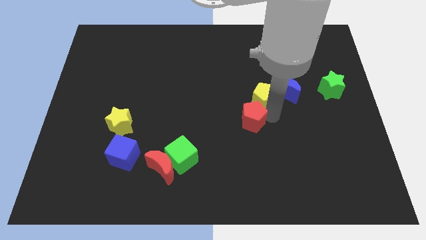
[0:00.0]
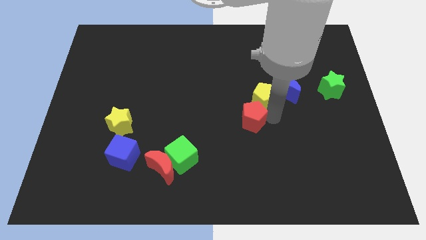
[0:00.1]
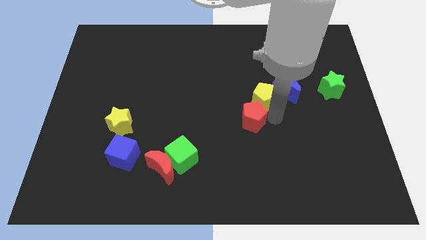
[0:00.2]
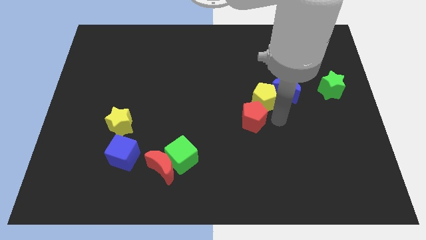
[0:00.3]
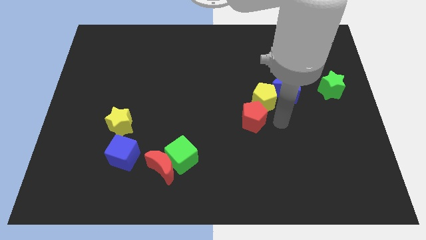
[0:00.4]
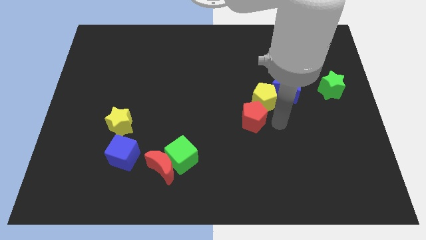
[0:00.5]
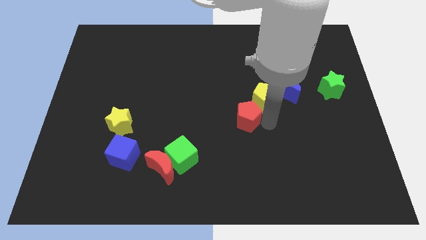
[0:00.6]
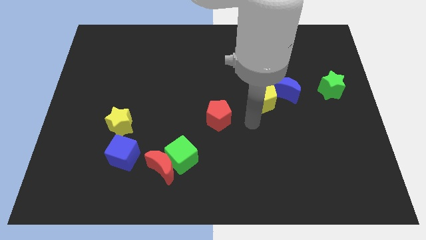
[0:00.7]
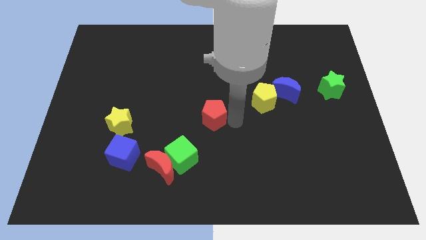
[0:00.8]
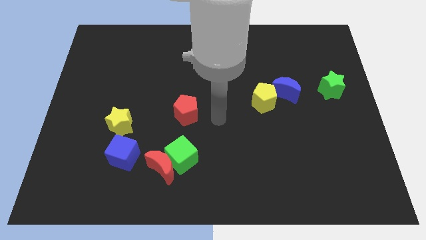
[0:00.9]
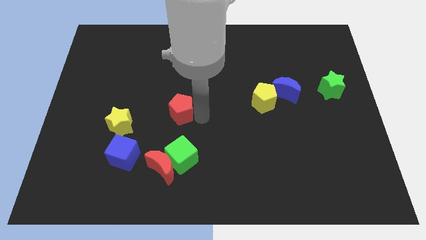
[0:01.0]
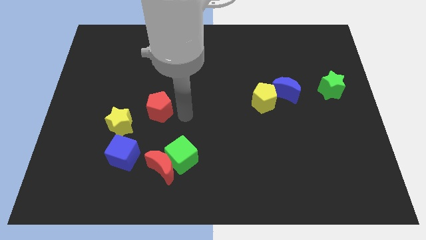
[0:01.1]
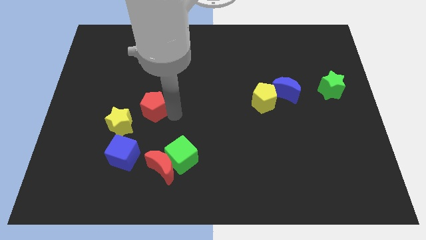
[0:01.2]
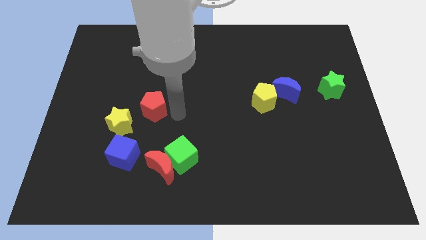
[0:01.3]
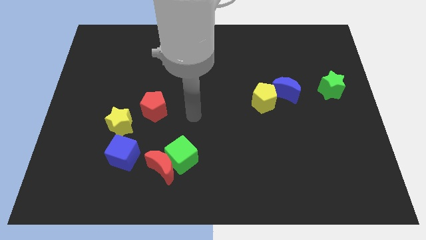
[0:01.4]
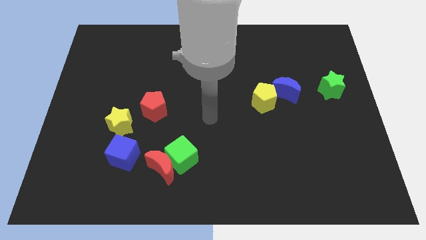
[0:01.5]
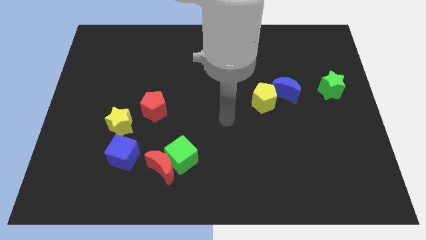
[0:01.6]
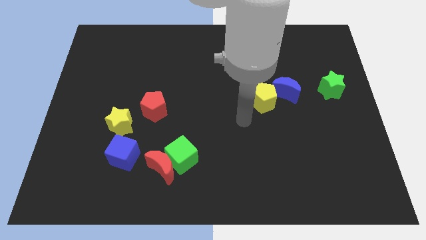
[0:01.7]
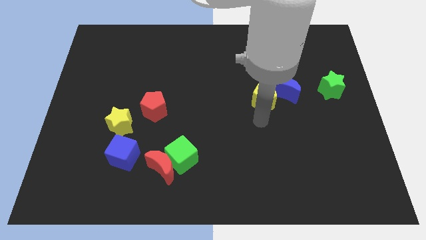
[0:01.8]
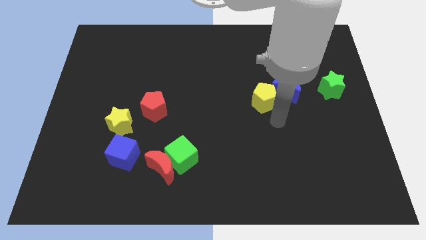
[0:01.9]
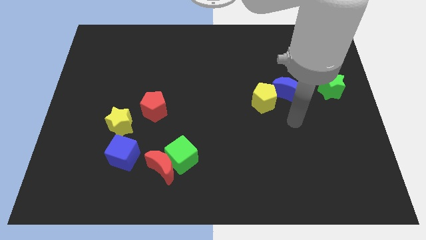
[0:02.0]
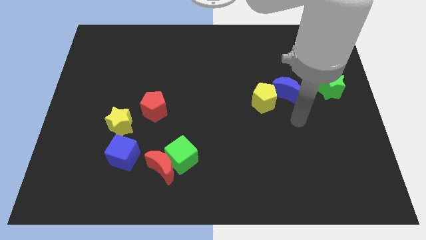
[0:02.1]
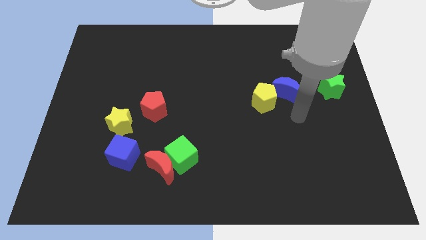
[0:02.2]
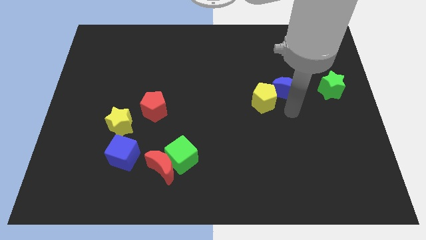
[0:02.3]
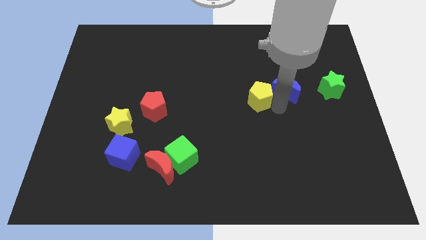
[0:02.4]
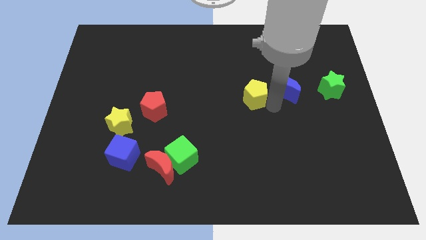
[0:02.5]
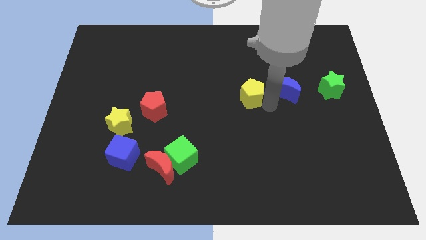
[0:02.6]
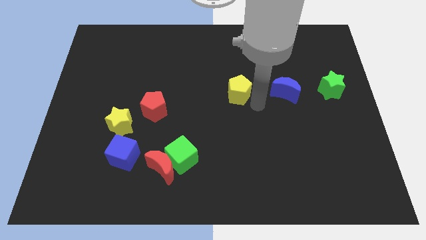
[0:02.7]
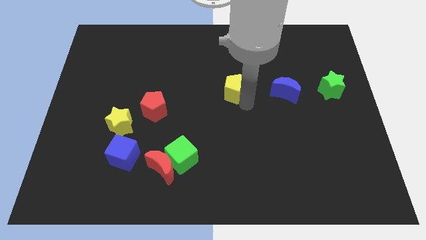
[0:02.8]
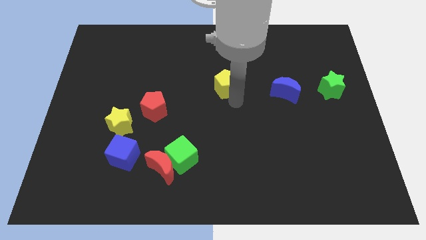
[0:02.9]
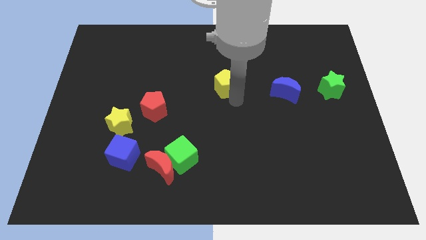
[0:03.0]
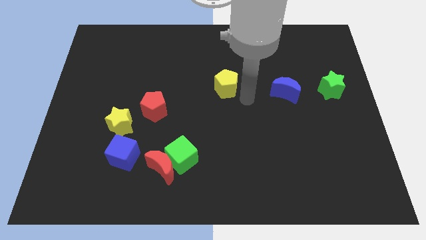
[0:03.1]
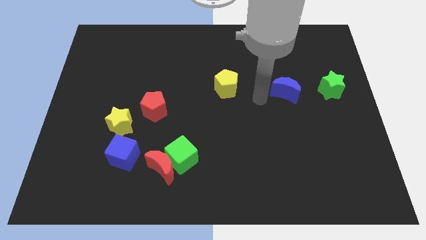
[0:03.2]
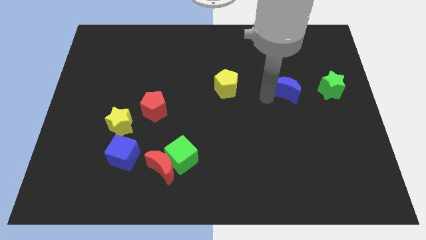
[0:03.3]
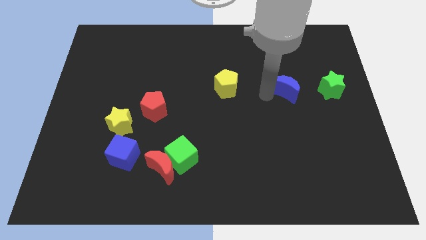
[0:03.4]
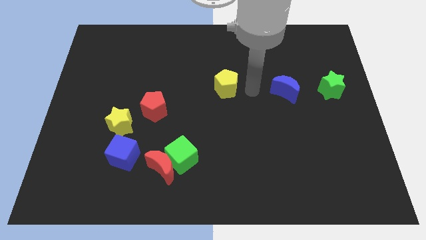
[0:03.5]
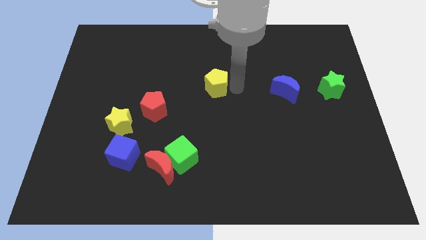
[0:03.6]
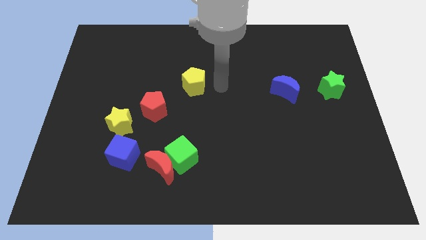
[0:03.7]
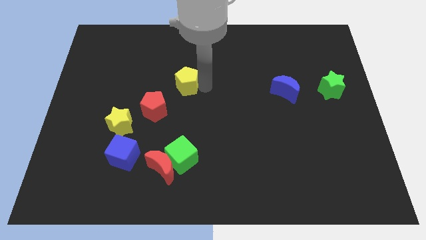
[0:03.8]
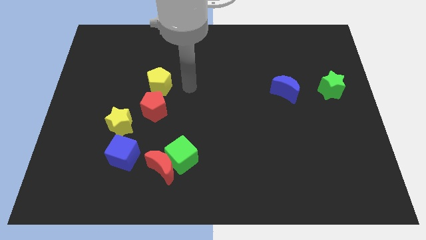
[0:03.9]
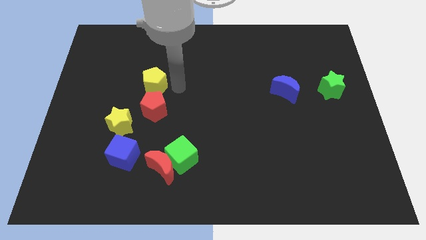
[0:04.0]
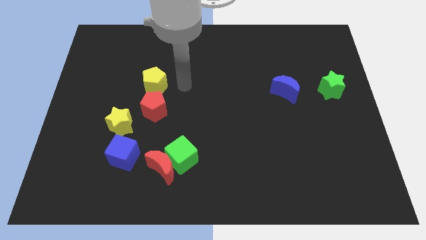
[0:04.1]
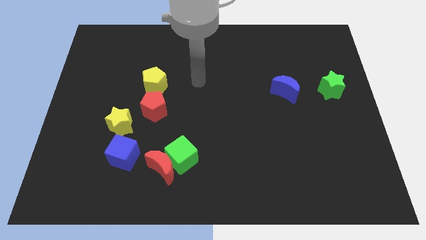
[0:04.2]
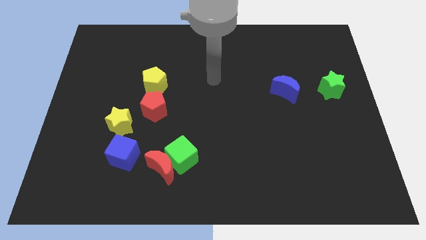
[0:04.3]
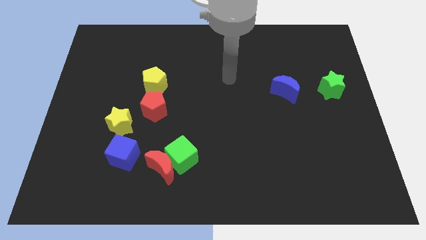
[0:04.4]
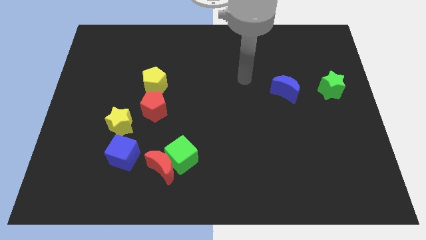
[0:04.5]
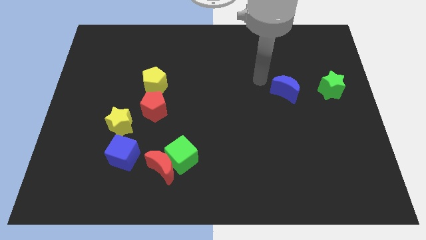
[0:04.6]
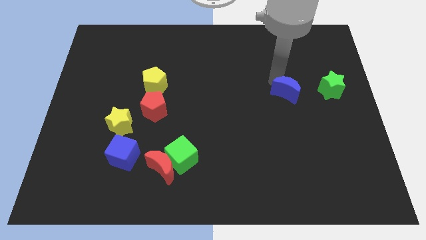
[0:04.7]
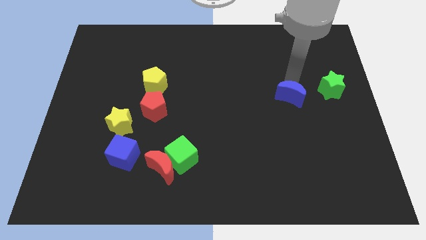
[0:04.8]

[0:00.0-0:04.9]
push the red and yellow pentagons on to the top right of the yellow star

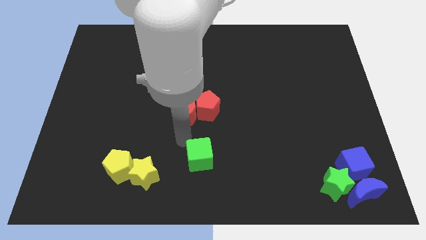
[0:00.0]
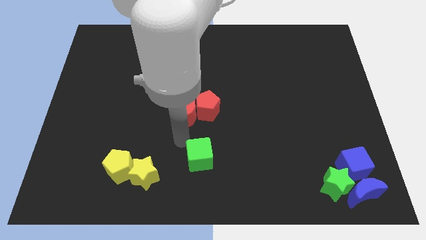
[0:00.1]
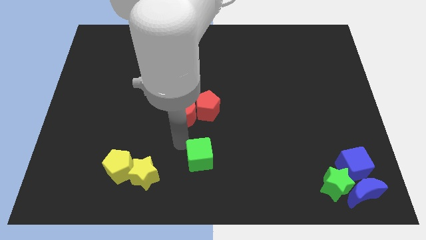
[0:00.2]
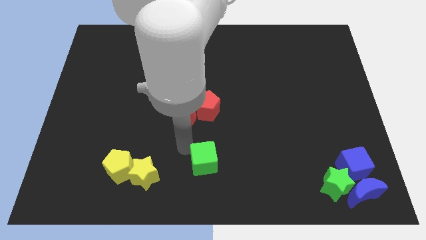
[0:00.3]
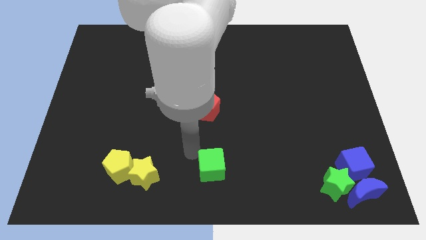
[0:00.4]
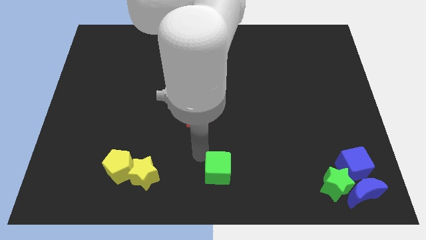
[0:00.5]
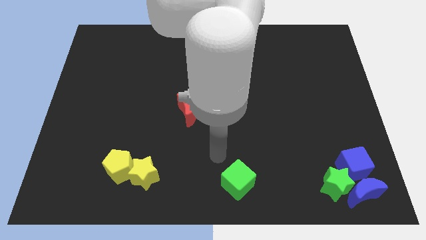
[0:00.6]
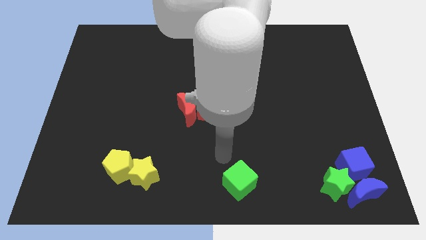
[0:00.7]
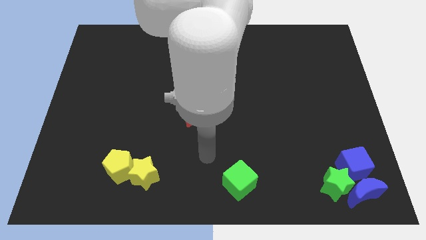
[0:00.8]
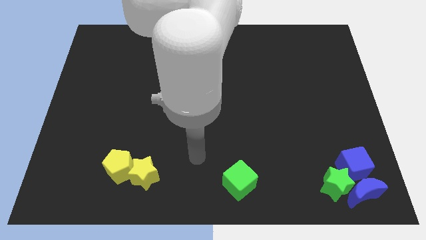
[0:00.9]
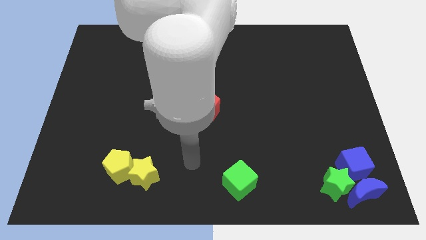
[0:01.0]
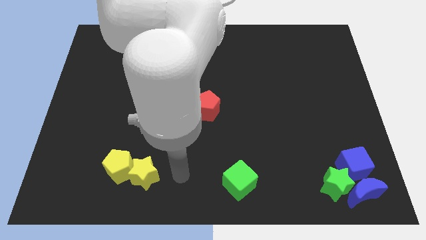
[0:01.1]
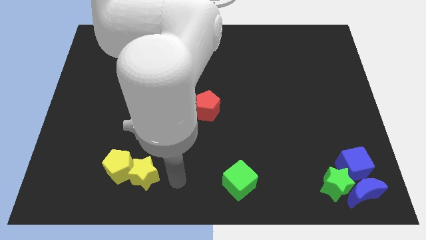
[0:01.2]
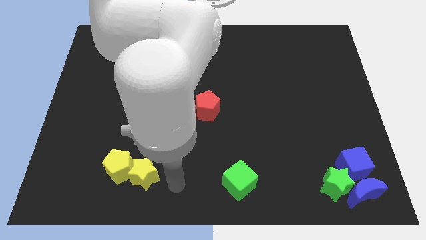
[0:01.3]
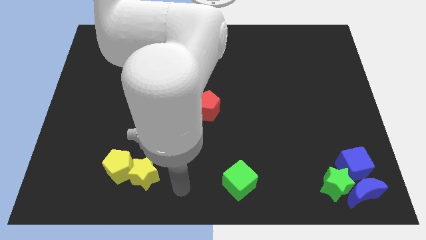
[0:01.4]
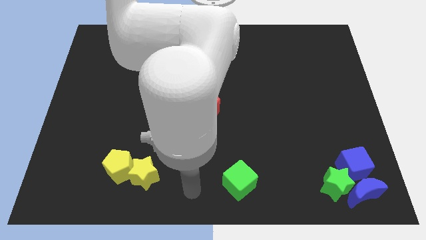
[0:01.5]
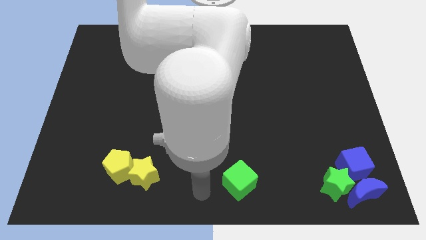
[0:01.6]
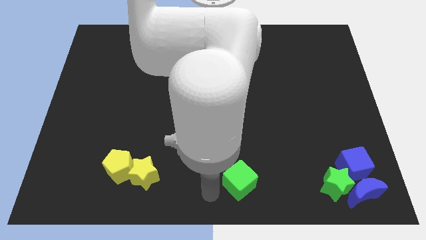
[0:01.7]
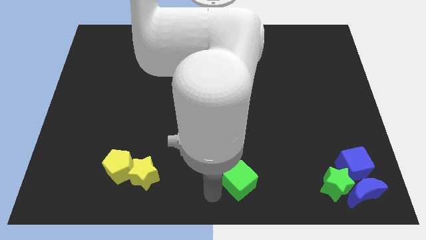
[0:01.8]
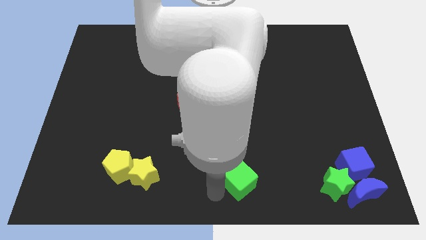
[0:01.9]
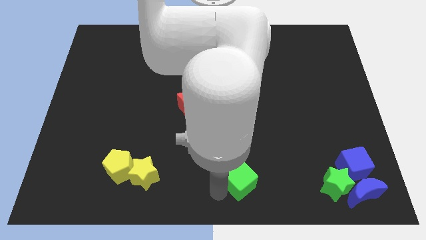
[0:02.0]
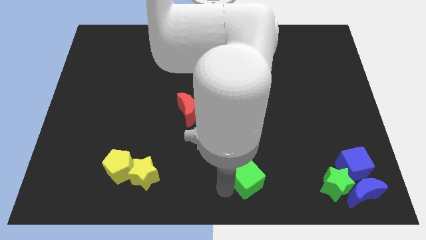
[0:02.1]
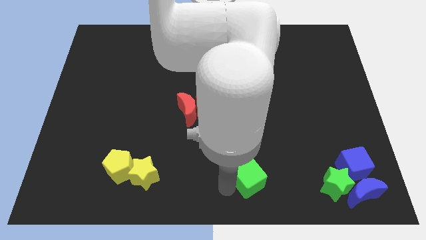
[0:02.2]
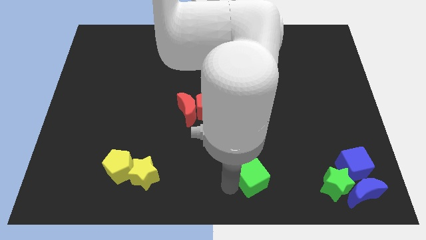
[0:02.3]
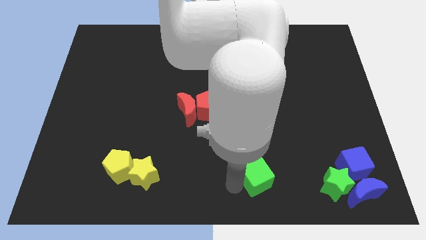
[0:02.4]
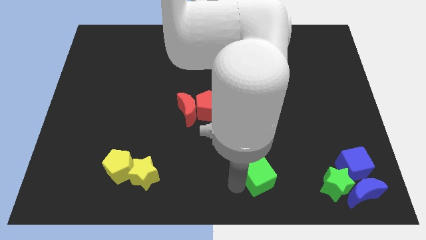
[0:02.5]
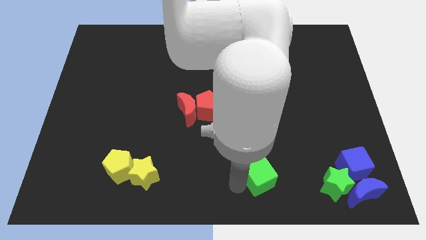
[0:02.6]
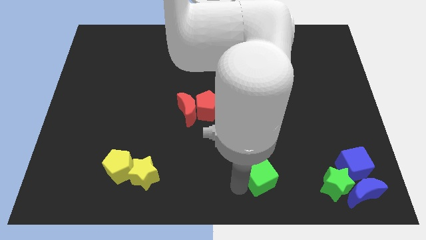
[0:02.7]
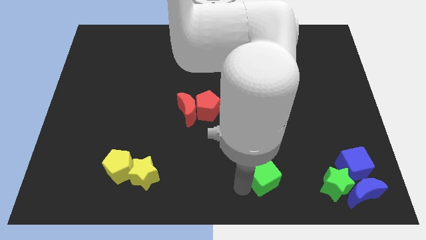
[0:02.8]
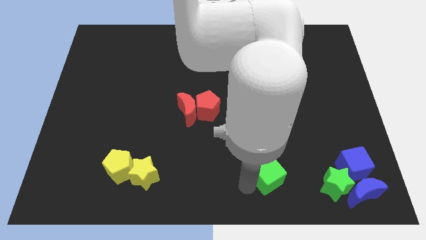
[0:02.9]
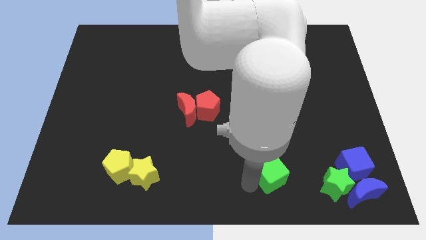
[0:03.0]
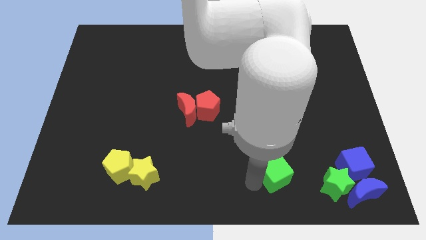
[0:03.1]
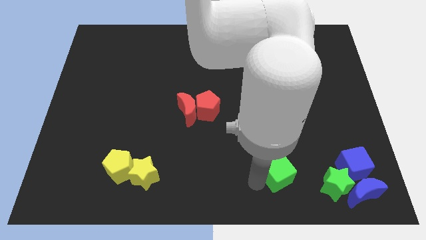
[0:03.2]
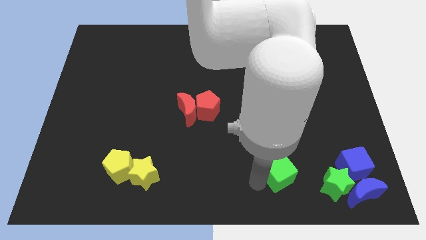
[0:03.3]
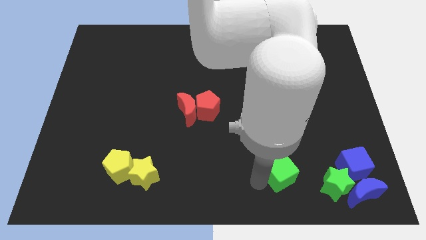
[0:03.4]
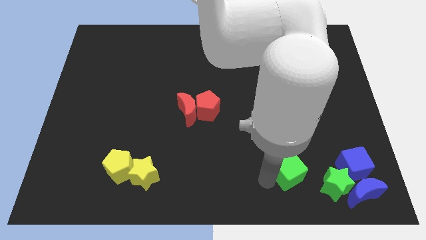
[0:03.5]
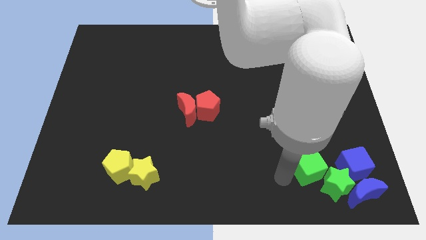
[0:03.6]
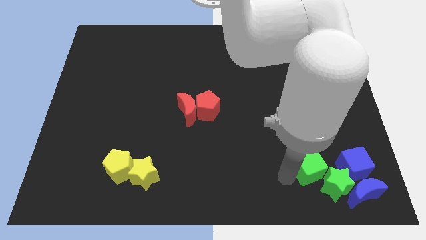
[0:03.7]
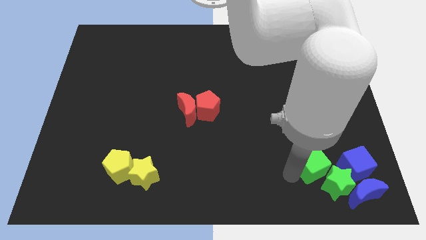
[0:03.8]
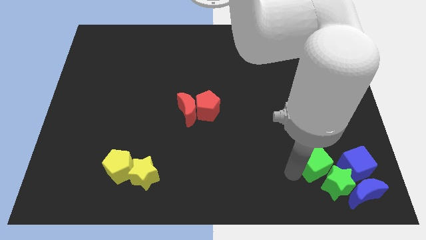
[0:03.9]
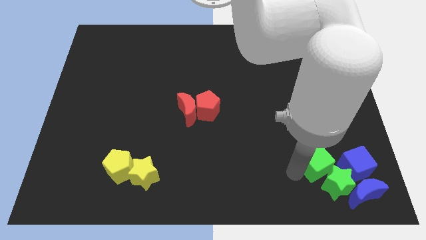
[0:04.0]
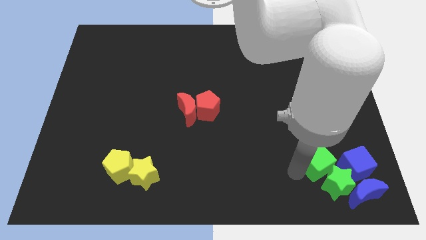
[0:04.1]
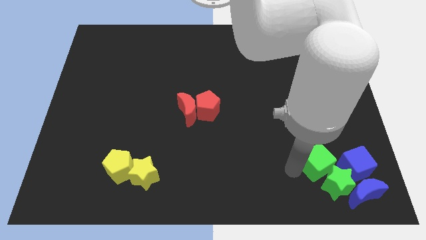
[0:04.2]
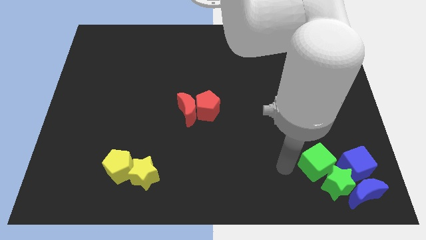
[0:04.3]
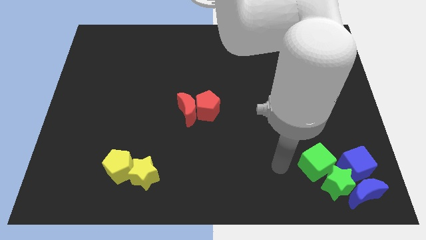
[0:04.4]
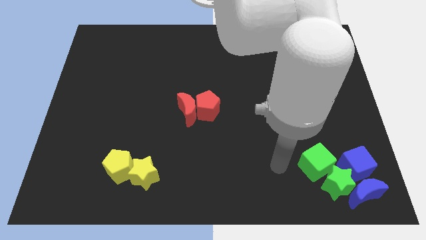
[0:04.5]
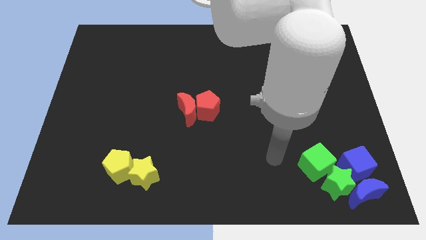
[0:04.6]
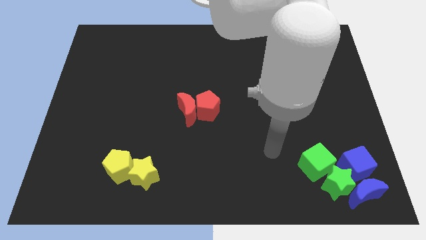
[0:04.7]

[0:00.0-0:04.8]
place the green cube to the left side of the blue cube
